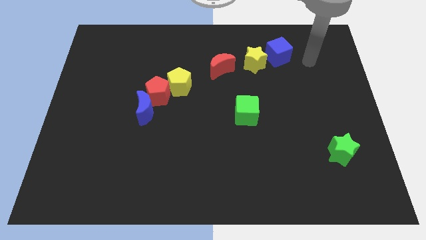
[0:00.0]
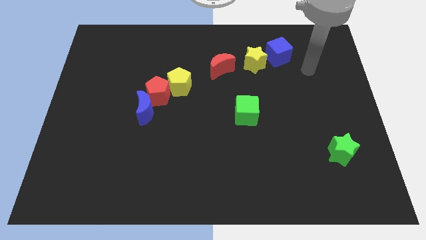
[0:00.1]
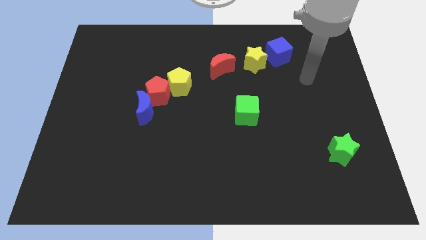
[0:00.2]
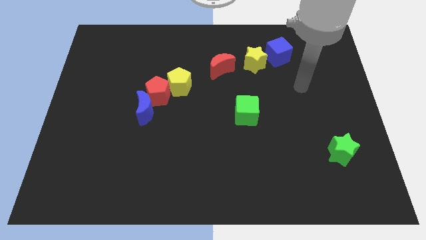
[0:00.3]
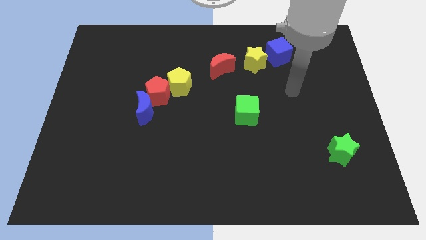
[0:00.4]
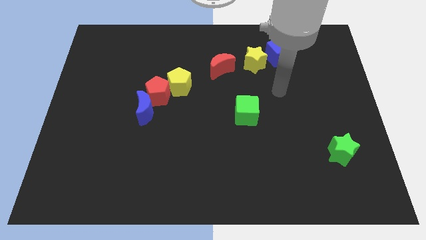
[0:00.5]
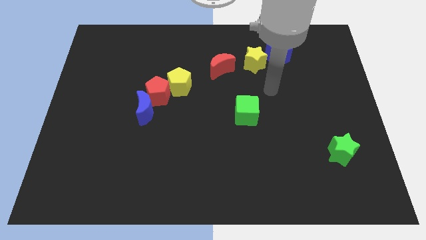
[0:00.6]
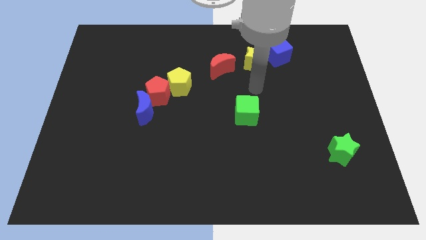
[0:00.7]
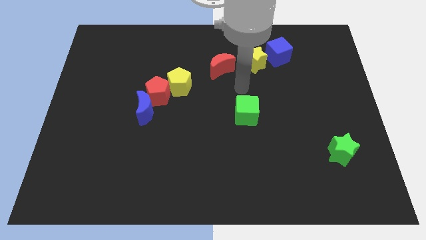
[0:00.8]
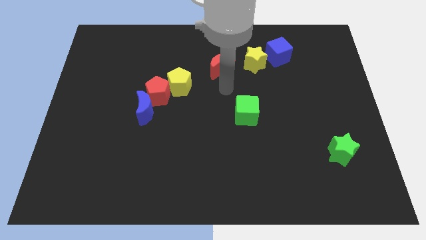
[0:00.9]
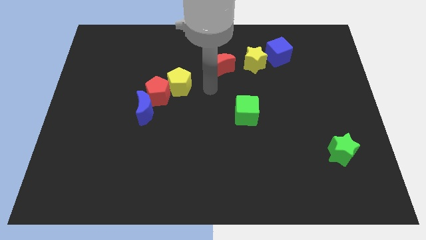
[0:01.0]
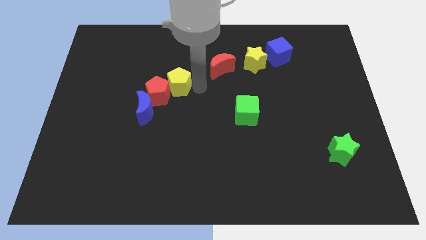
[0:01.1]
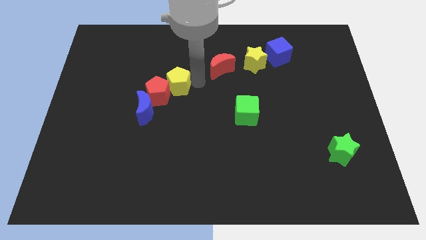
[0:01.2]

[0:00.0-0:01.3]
point your arm at the right of the yellow pentagon

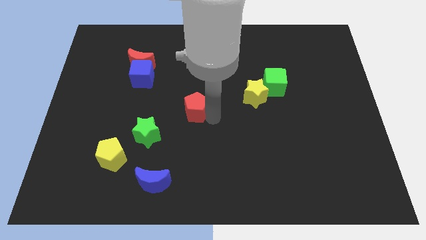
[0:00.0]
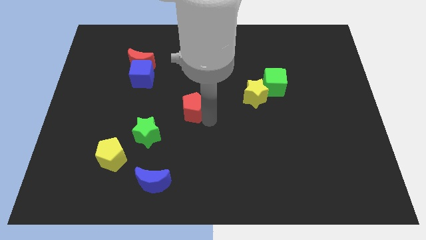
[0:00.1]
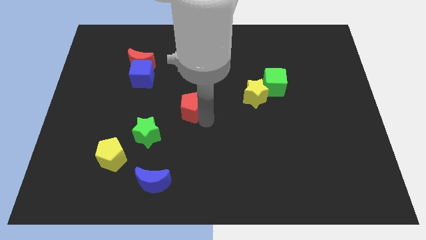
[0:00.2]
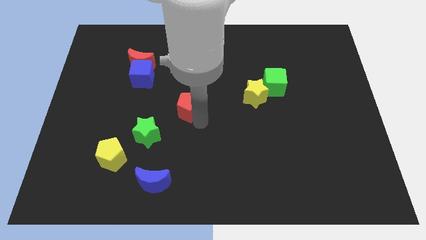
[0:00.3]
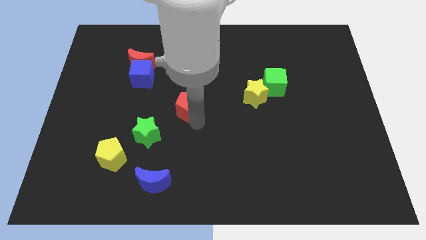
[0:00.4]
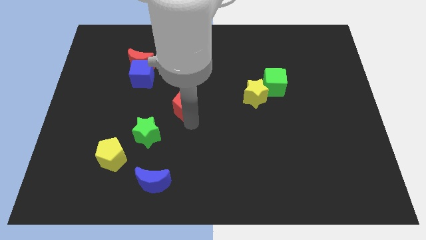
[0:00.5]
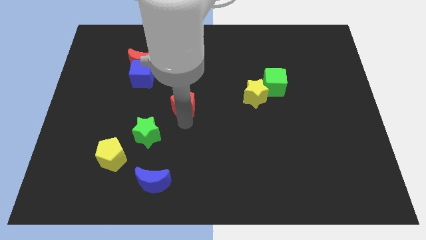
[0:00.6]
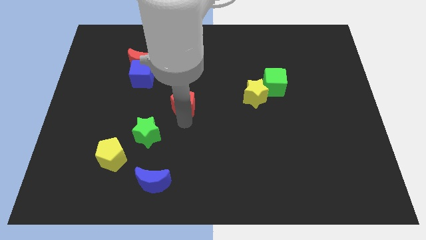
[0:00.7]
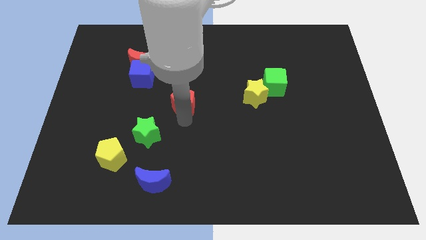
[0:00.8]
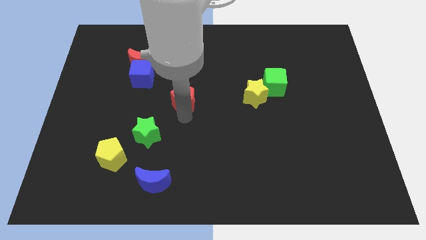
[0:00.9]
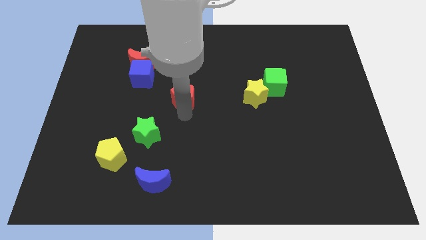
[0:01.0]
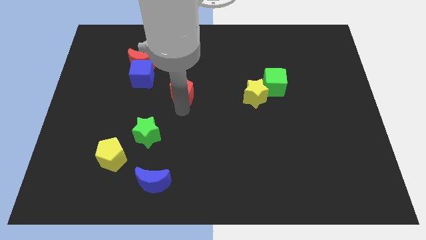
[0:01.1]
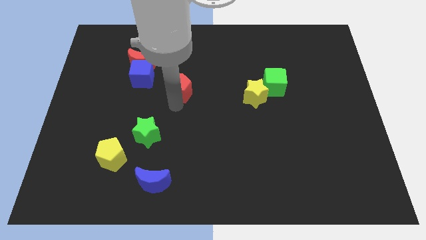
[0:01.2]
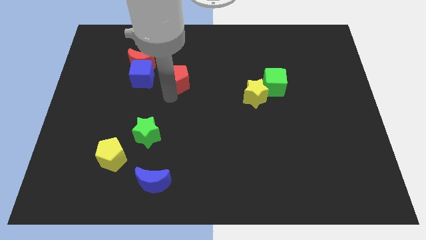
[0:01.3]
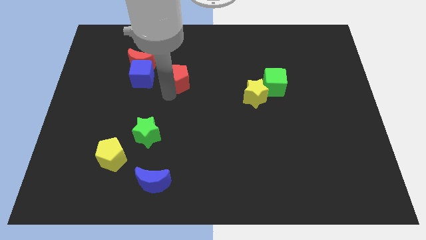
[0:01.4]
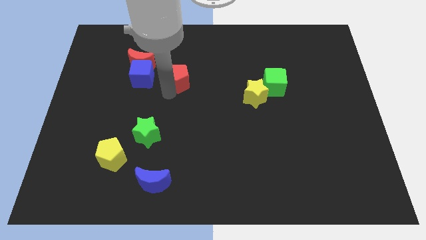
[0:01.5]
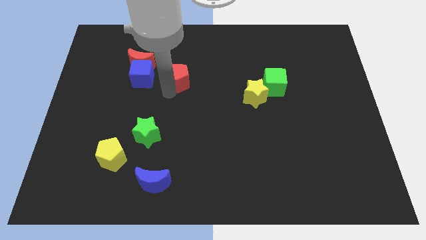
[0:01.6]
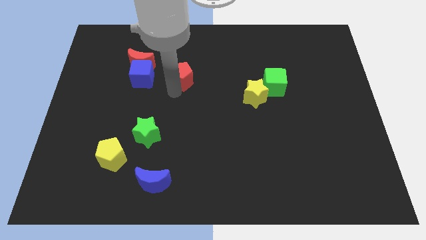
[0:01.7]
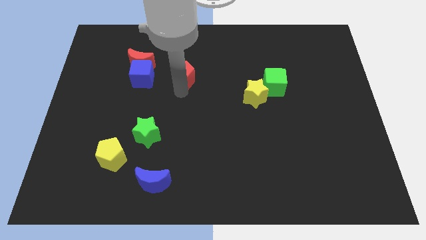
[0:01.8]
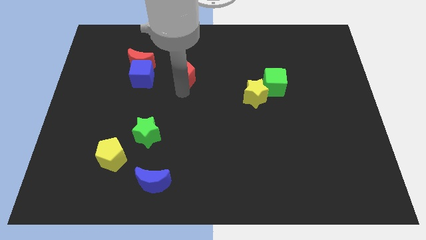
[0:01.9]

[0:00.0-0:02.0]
place the red pentagon to the right of the blue cube

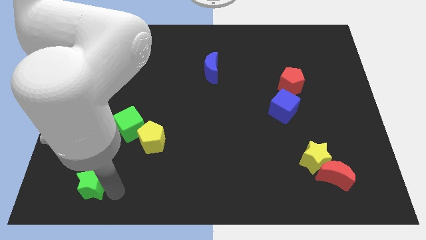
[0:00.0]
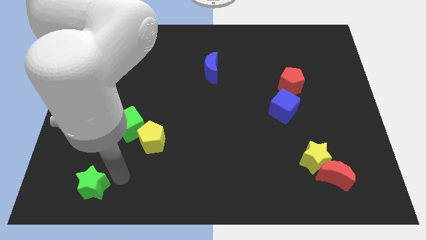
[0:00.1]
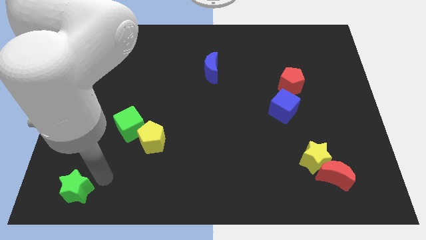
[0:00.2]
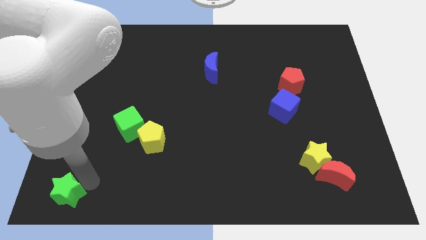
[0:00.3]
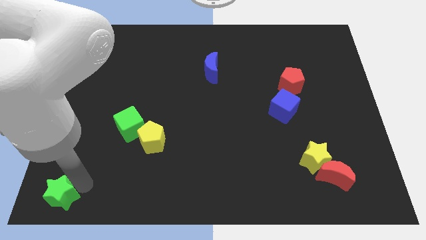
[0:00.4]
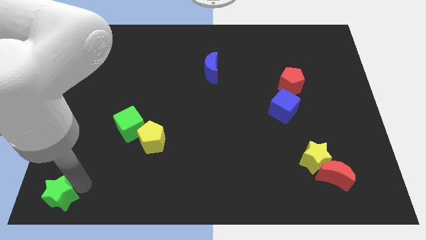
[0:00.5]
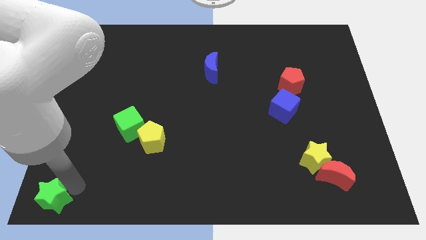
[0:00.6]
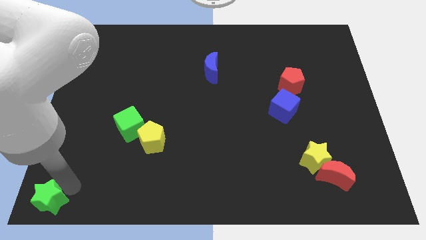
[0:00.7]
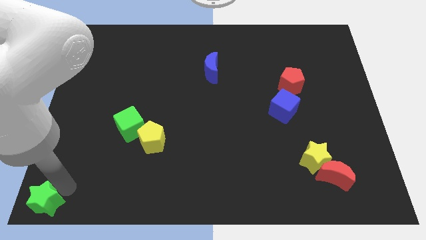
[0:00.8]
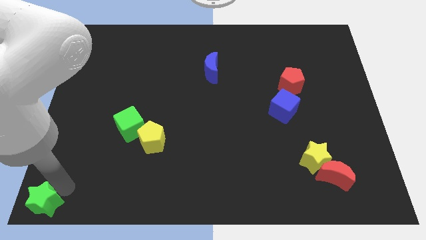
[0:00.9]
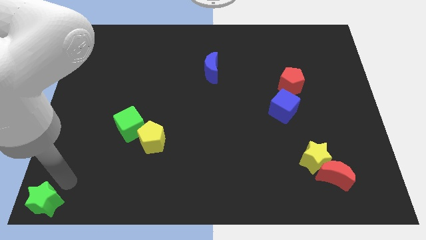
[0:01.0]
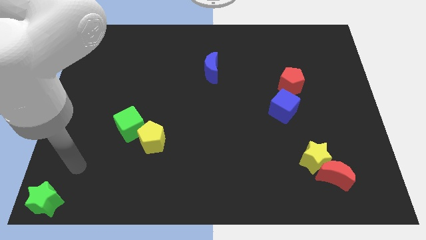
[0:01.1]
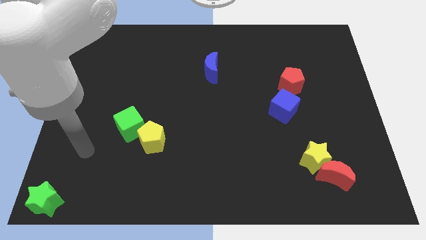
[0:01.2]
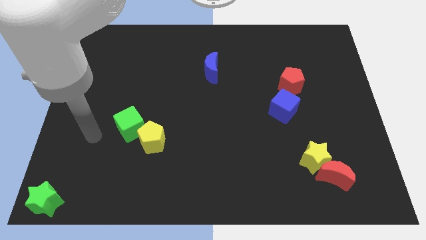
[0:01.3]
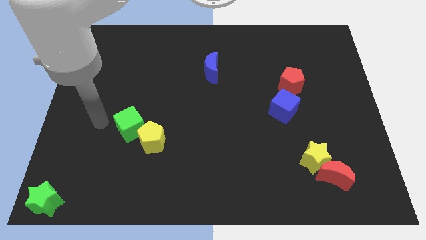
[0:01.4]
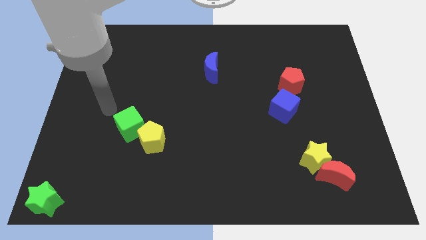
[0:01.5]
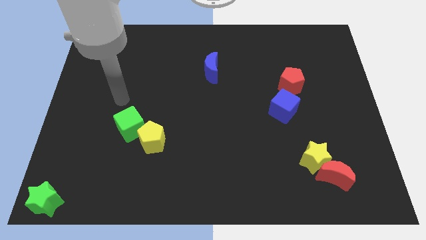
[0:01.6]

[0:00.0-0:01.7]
push the green star to the bottom left corner of the board

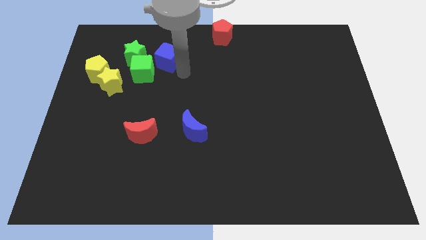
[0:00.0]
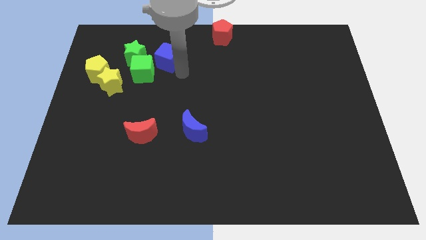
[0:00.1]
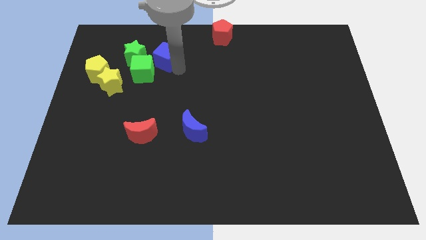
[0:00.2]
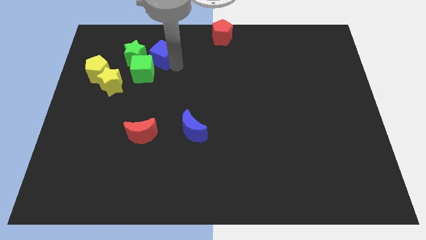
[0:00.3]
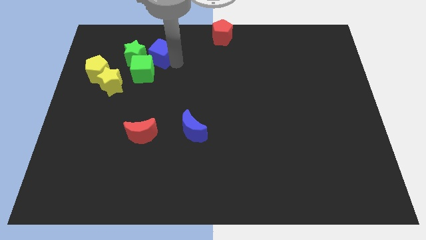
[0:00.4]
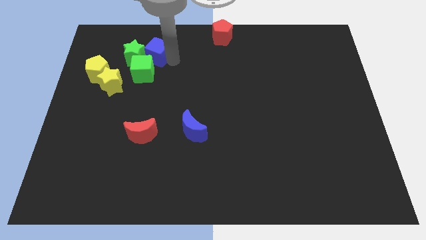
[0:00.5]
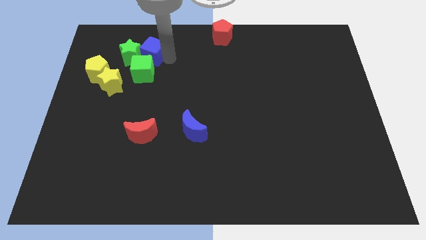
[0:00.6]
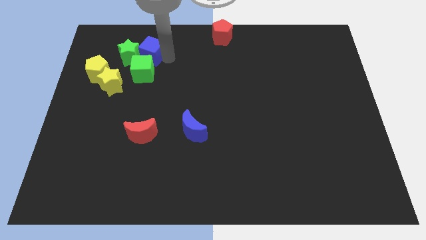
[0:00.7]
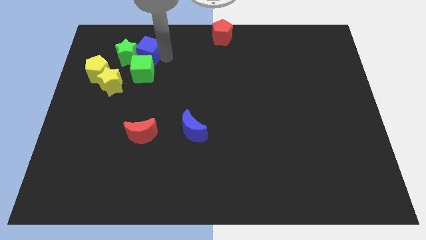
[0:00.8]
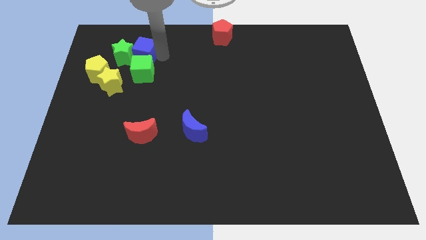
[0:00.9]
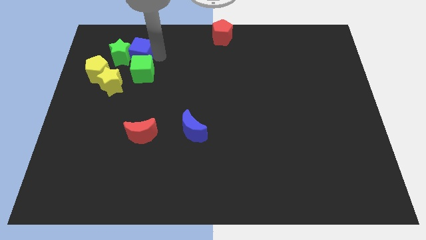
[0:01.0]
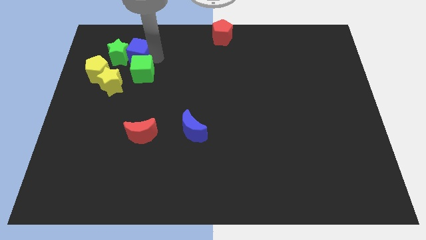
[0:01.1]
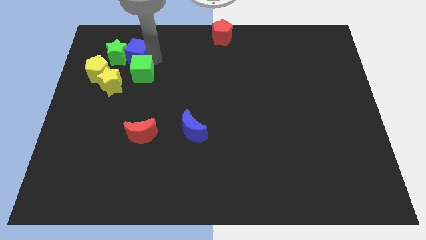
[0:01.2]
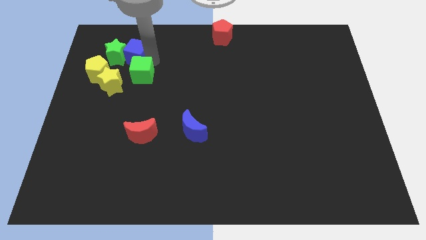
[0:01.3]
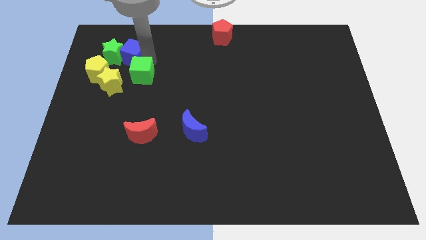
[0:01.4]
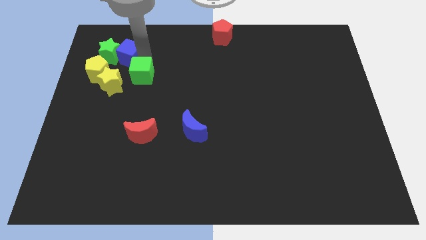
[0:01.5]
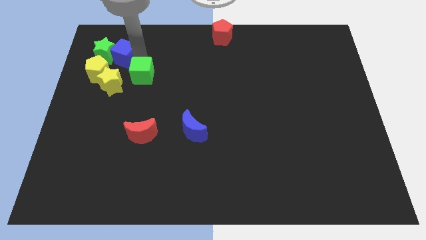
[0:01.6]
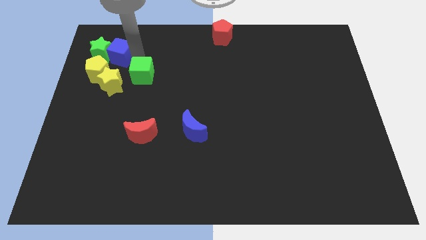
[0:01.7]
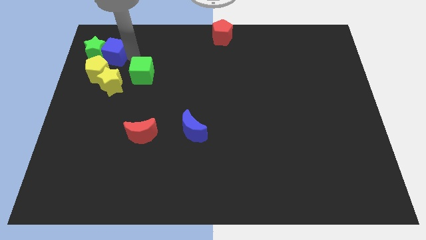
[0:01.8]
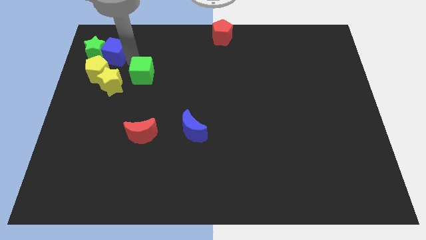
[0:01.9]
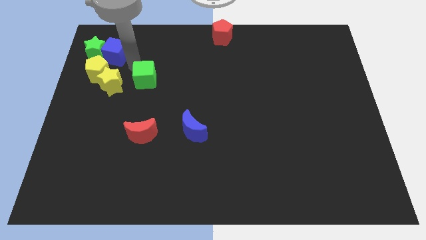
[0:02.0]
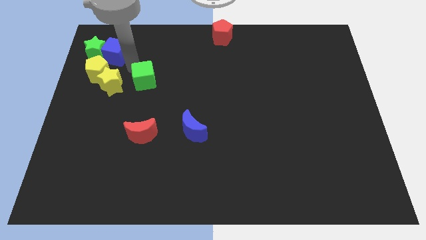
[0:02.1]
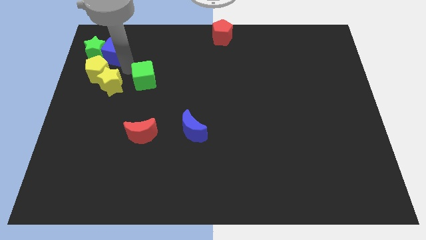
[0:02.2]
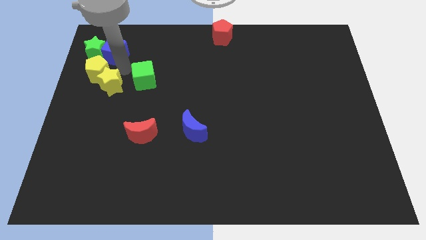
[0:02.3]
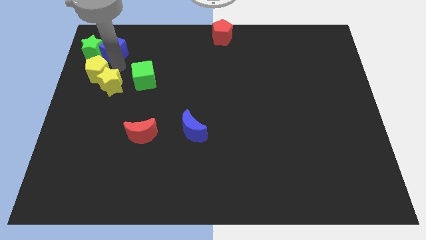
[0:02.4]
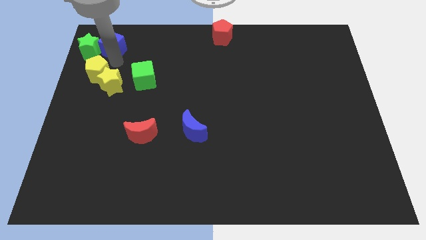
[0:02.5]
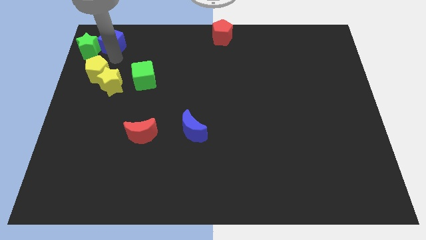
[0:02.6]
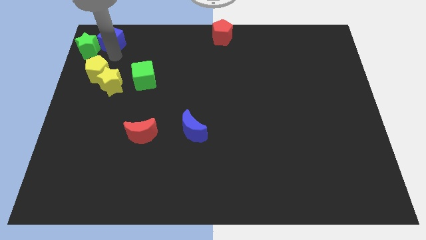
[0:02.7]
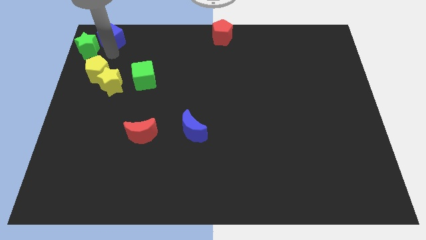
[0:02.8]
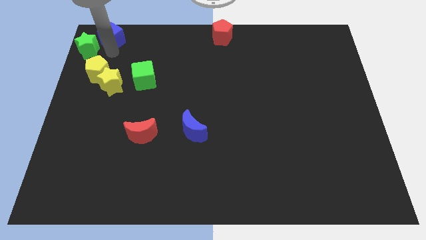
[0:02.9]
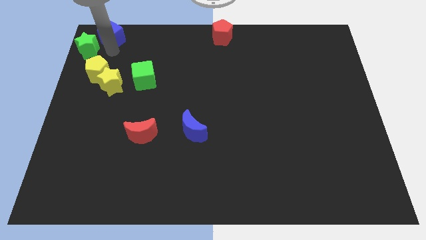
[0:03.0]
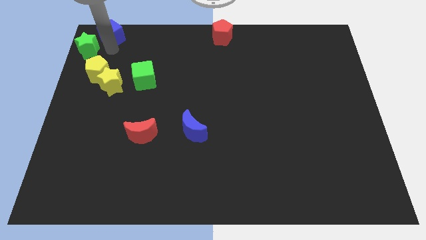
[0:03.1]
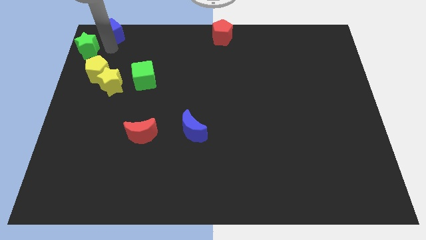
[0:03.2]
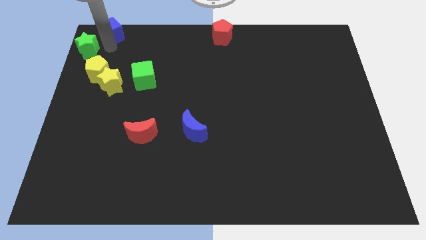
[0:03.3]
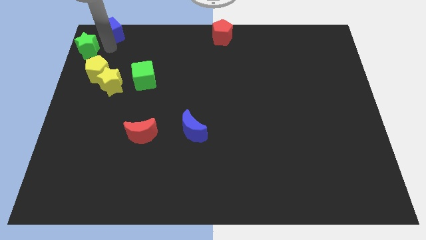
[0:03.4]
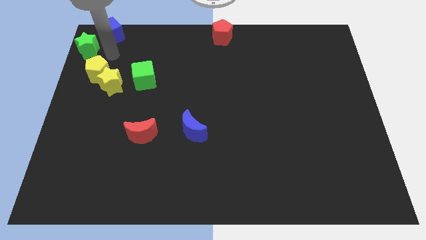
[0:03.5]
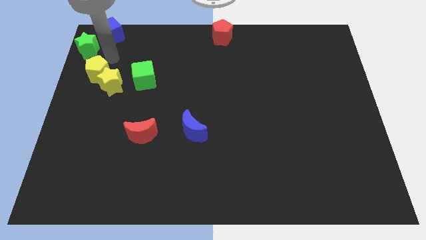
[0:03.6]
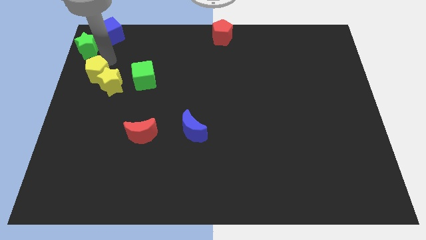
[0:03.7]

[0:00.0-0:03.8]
place blue cube to the top left corner of the board

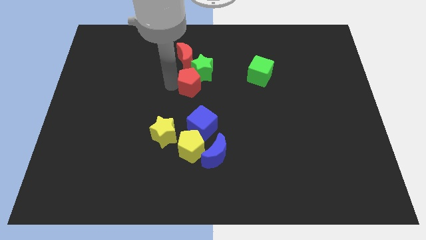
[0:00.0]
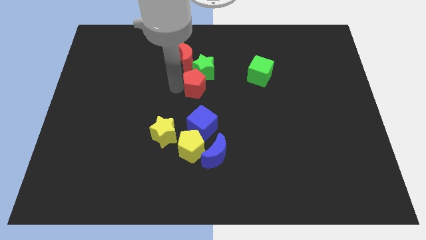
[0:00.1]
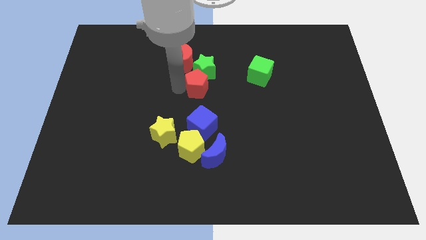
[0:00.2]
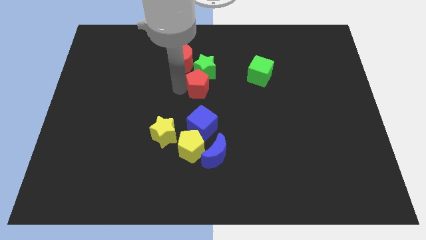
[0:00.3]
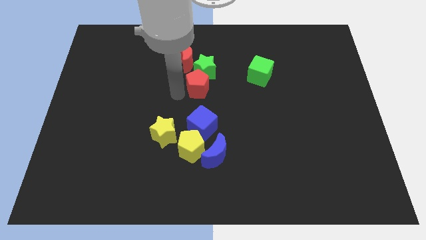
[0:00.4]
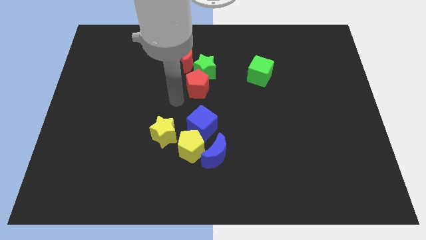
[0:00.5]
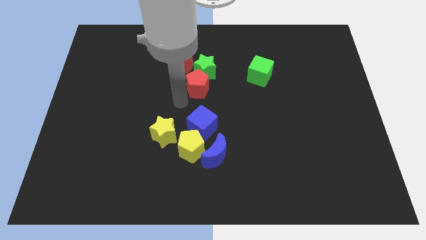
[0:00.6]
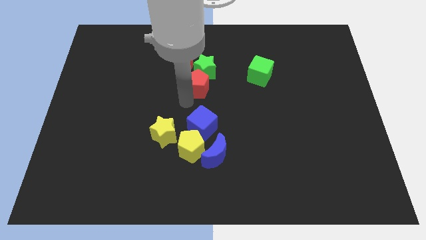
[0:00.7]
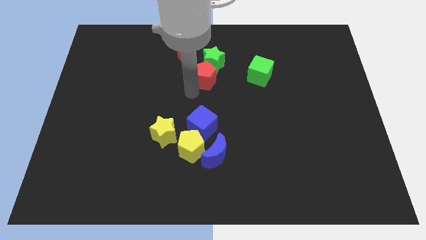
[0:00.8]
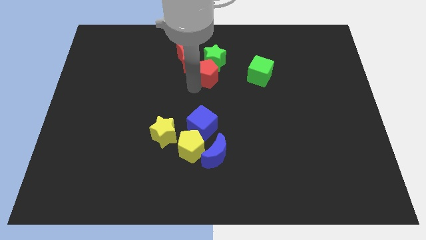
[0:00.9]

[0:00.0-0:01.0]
push the red pentagon into green star
